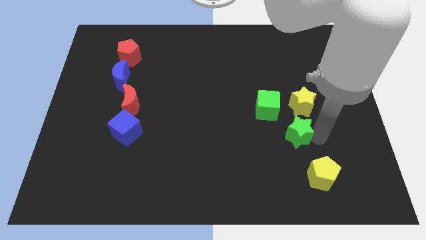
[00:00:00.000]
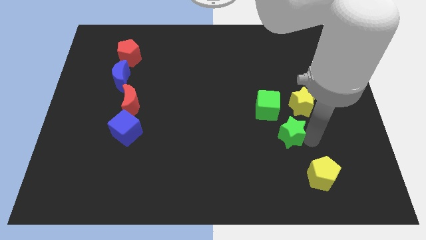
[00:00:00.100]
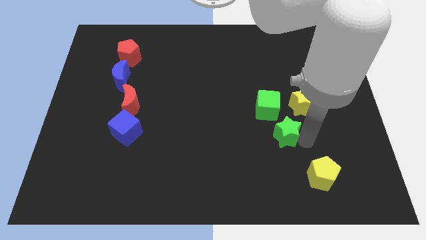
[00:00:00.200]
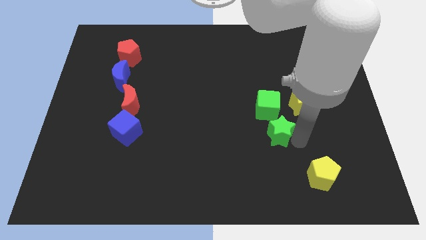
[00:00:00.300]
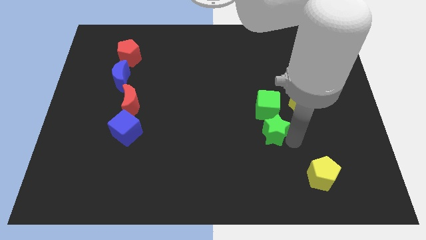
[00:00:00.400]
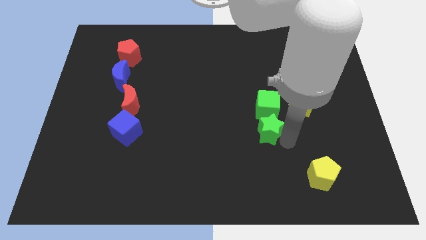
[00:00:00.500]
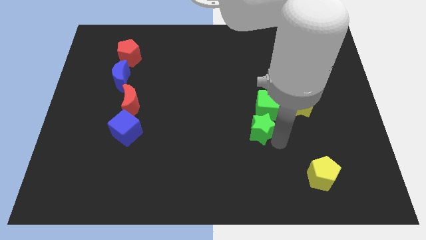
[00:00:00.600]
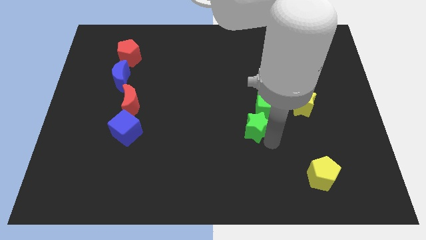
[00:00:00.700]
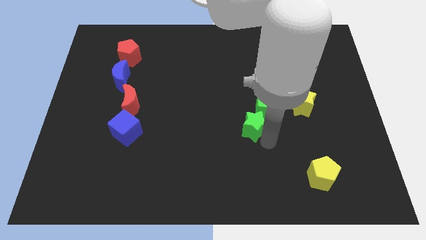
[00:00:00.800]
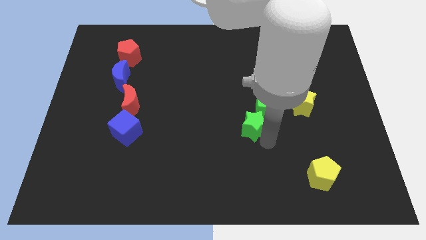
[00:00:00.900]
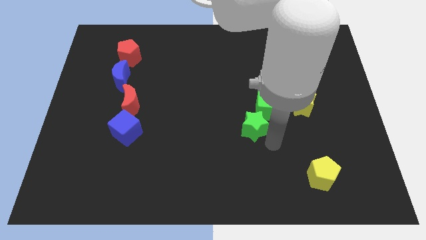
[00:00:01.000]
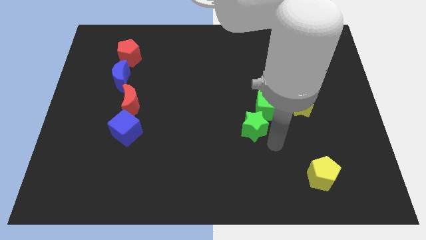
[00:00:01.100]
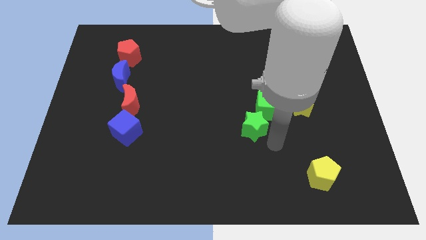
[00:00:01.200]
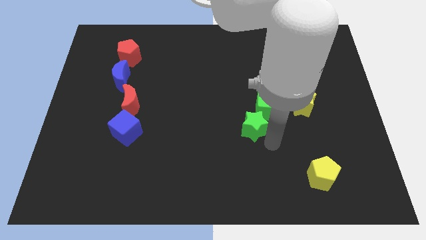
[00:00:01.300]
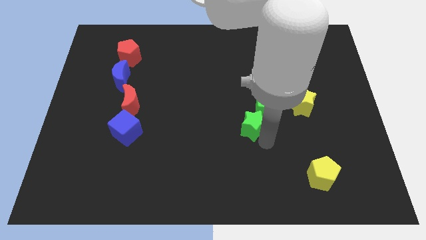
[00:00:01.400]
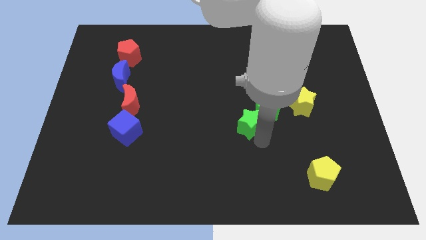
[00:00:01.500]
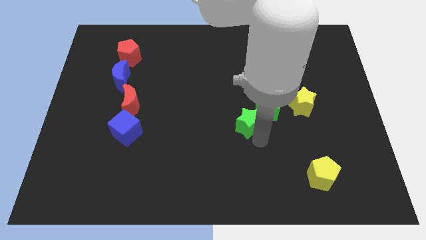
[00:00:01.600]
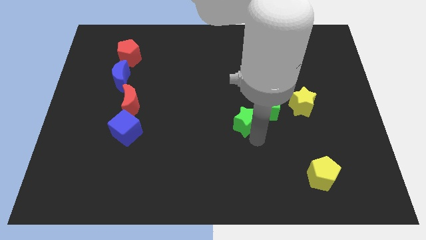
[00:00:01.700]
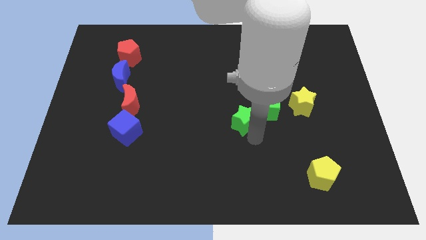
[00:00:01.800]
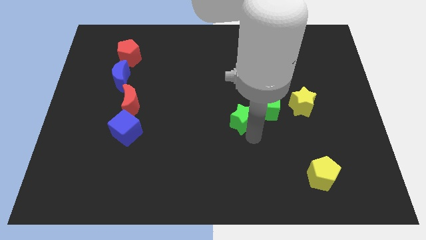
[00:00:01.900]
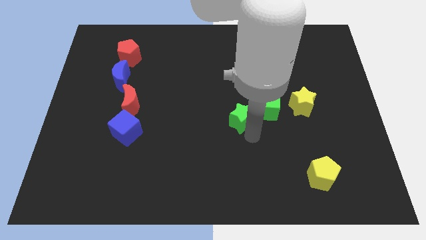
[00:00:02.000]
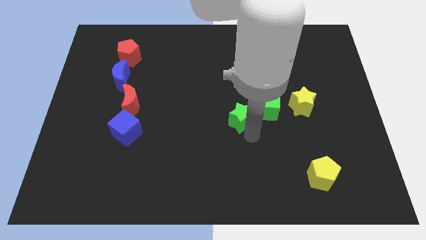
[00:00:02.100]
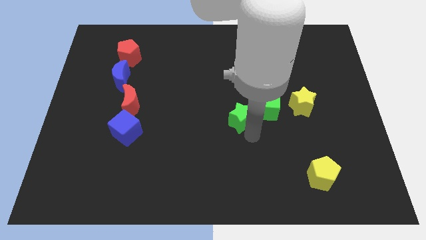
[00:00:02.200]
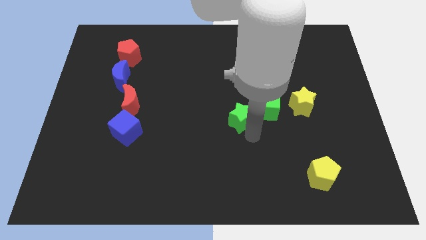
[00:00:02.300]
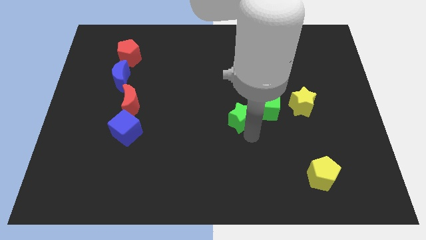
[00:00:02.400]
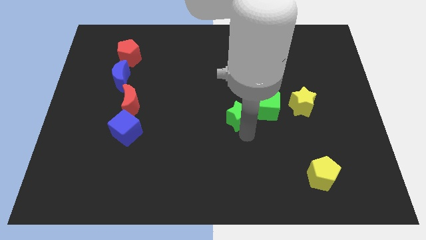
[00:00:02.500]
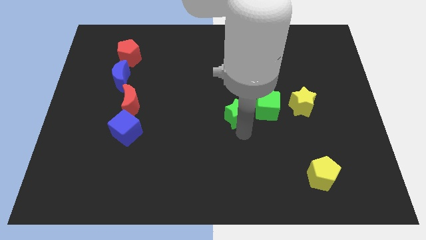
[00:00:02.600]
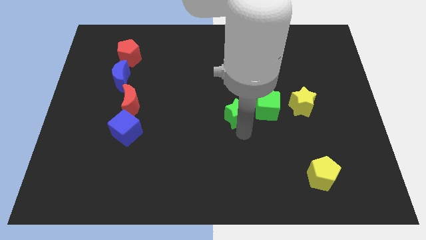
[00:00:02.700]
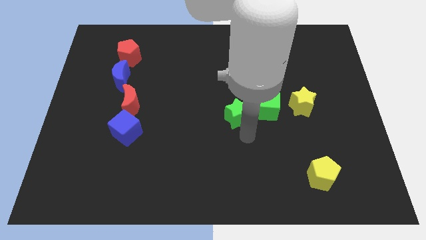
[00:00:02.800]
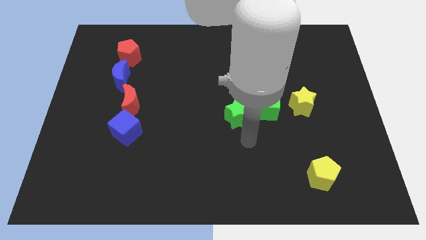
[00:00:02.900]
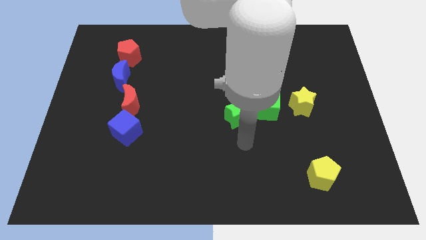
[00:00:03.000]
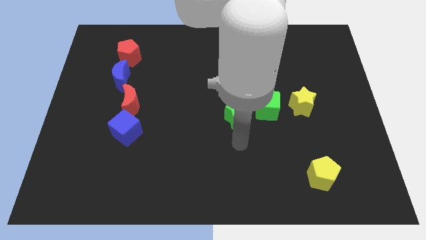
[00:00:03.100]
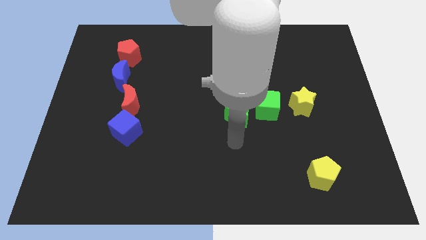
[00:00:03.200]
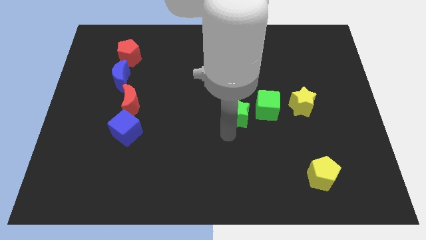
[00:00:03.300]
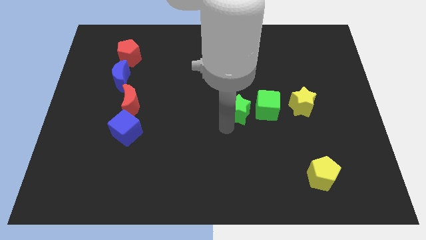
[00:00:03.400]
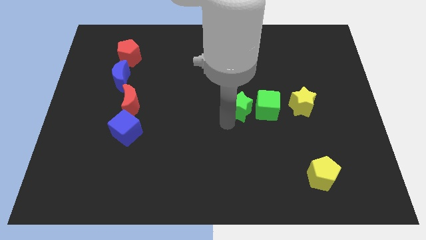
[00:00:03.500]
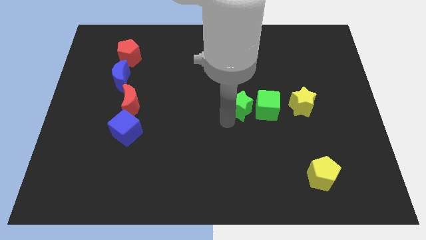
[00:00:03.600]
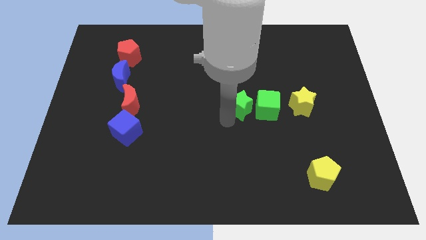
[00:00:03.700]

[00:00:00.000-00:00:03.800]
move the green star to the left of the green cube

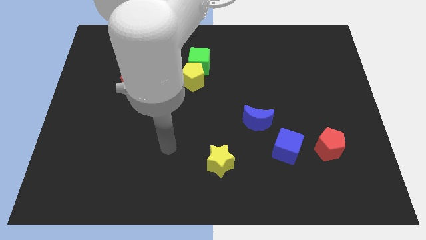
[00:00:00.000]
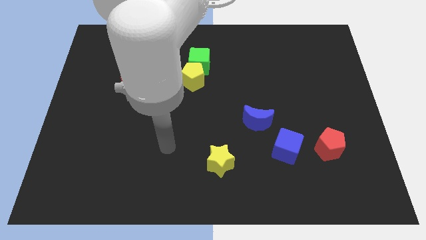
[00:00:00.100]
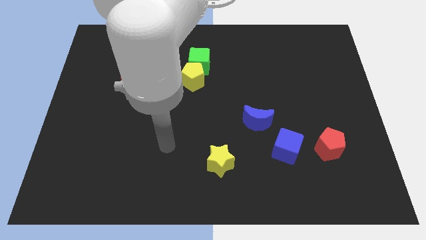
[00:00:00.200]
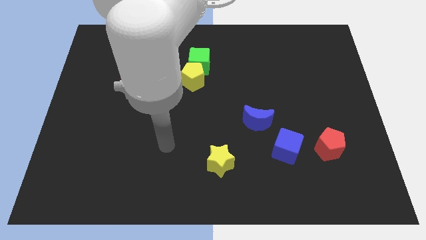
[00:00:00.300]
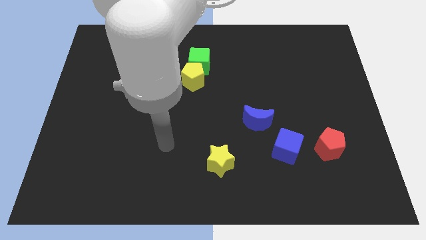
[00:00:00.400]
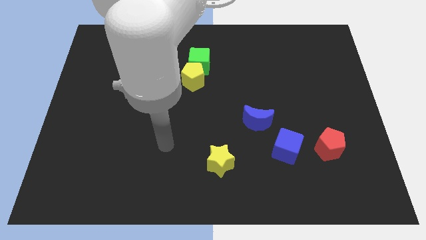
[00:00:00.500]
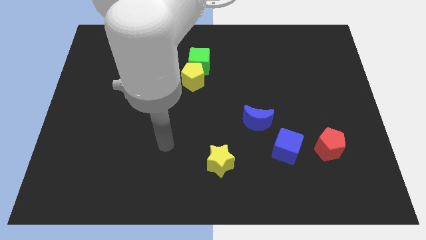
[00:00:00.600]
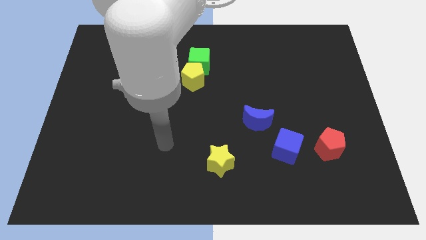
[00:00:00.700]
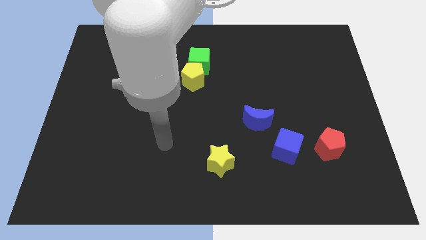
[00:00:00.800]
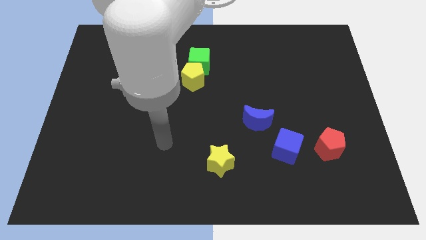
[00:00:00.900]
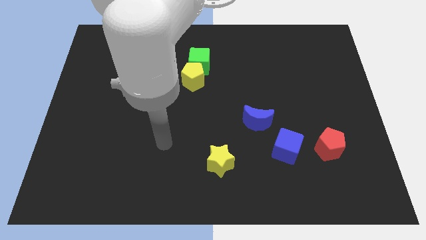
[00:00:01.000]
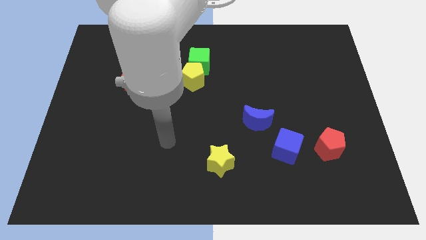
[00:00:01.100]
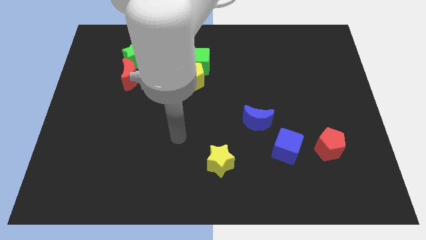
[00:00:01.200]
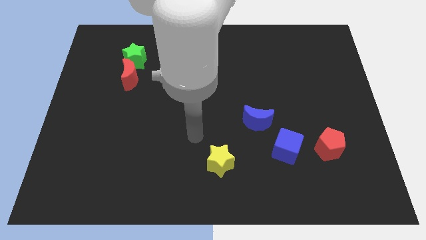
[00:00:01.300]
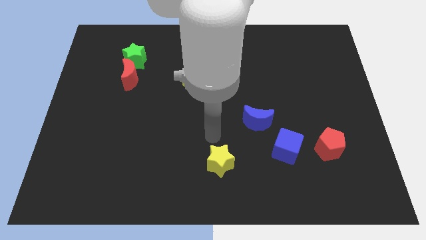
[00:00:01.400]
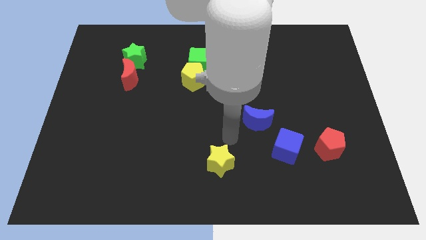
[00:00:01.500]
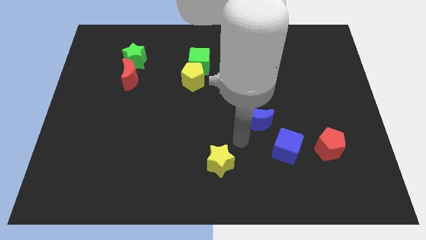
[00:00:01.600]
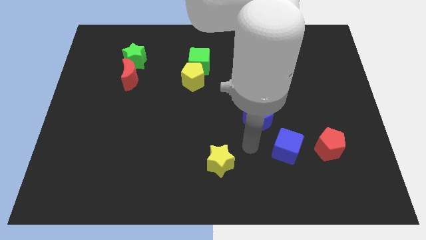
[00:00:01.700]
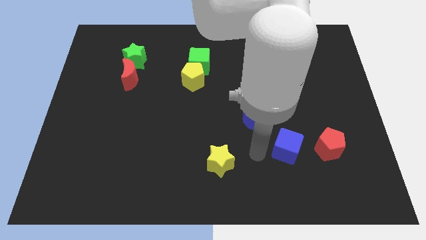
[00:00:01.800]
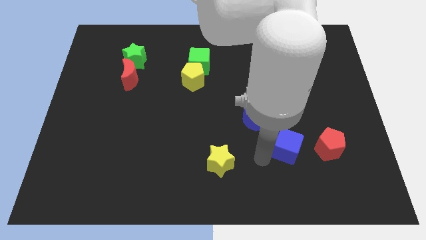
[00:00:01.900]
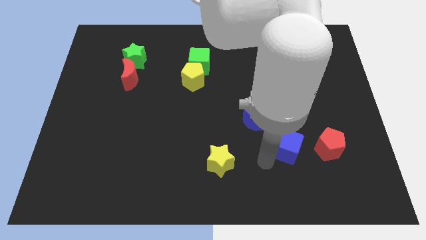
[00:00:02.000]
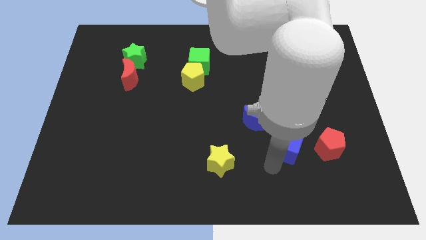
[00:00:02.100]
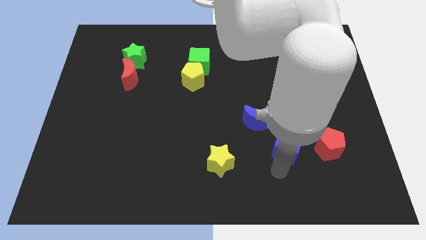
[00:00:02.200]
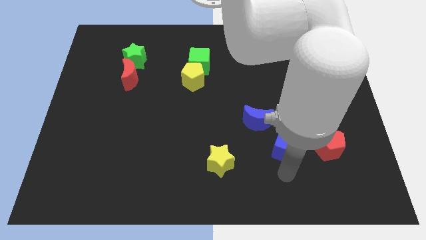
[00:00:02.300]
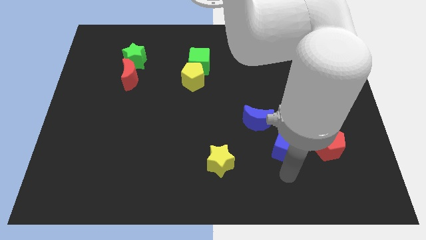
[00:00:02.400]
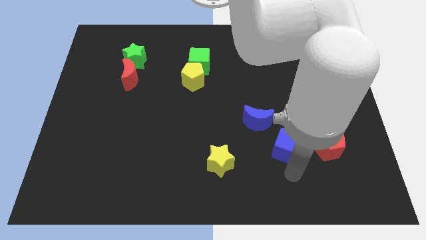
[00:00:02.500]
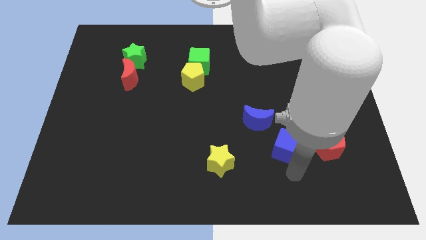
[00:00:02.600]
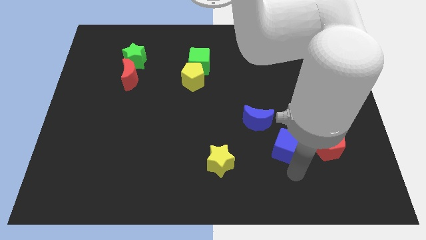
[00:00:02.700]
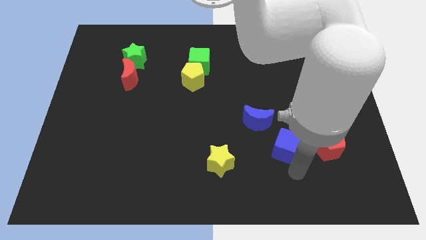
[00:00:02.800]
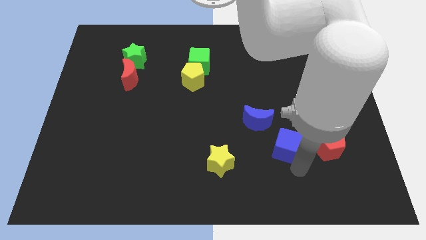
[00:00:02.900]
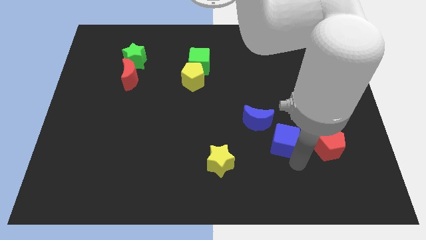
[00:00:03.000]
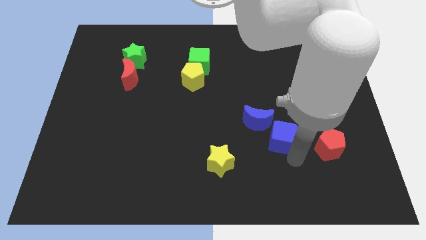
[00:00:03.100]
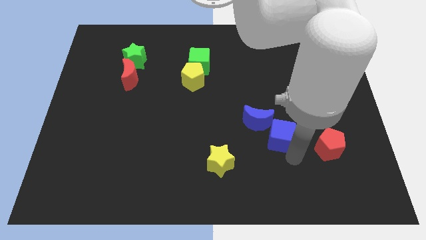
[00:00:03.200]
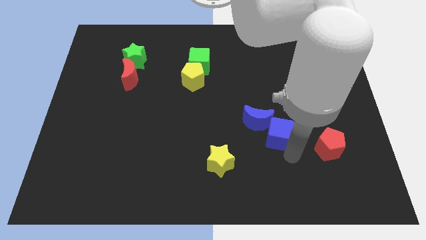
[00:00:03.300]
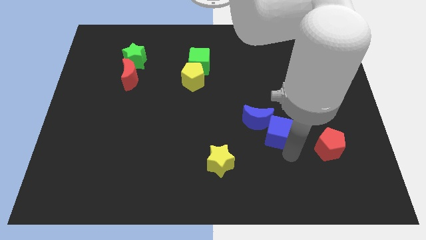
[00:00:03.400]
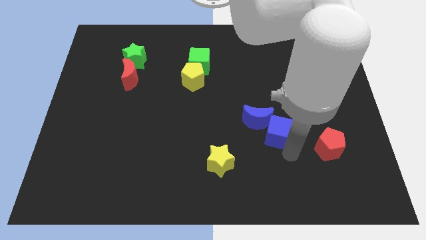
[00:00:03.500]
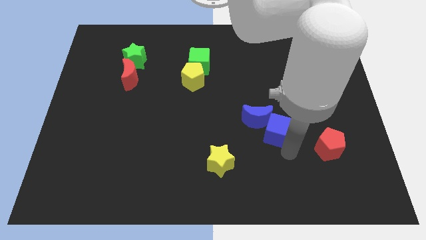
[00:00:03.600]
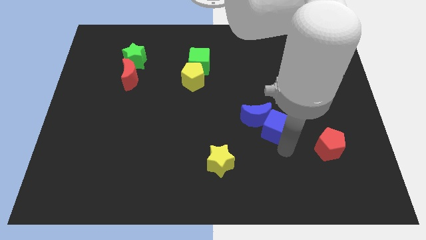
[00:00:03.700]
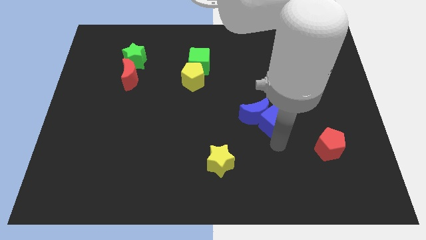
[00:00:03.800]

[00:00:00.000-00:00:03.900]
move the blue cube into the blue crescent

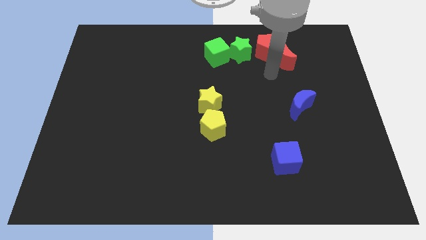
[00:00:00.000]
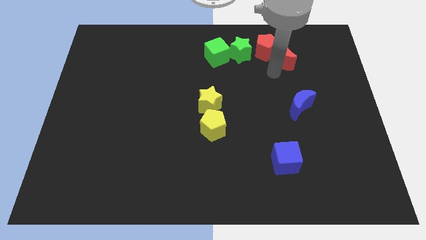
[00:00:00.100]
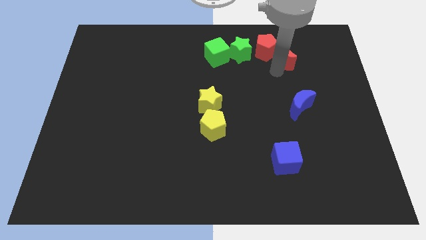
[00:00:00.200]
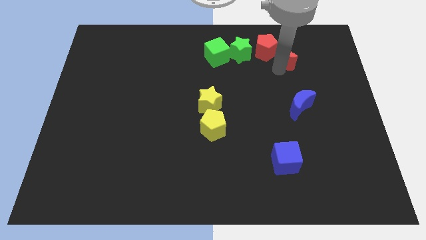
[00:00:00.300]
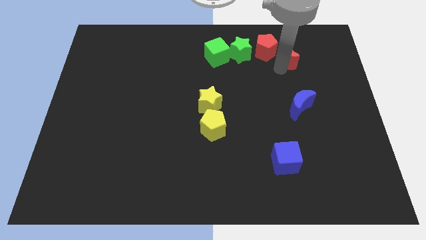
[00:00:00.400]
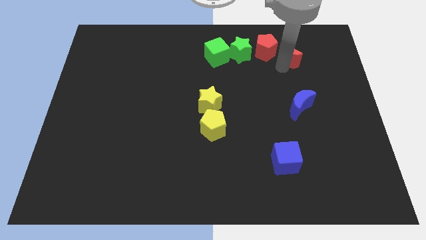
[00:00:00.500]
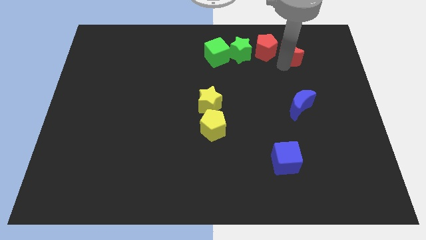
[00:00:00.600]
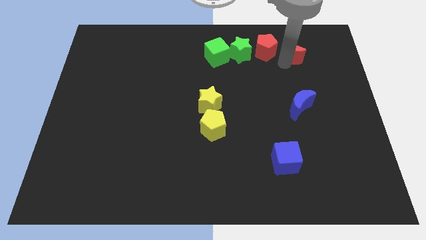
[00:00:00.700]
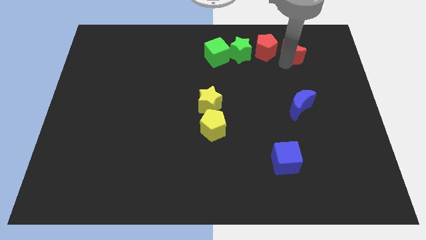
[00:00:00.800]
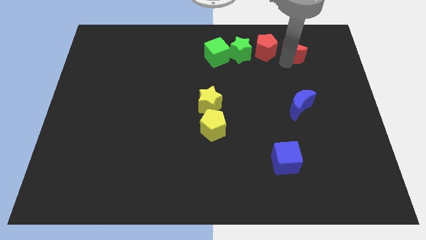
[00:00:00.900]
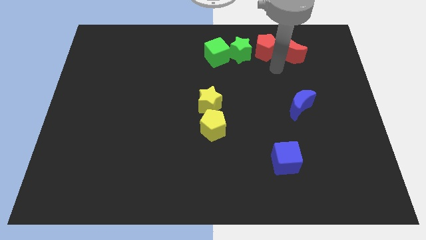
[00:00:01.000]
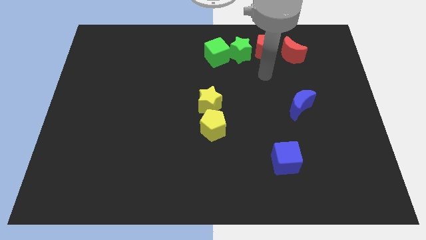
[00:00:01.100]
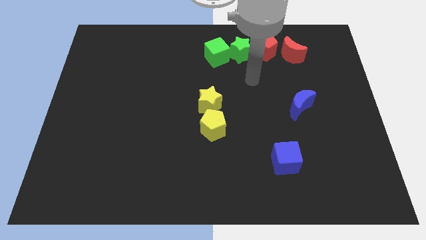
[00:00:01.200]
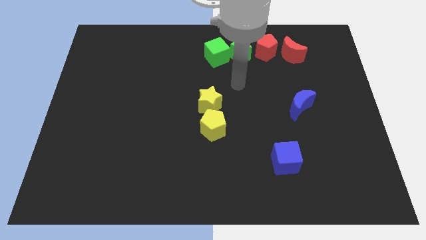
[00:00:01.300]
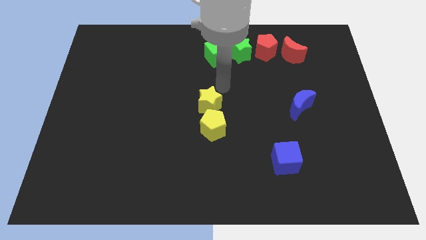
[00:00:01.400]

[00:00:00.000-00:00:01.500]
place the red moon to the right side of red pentagon
